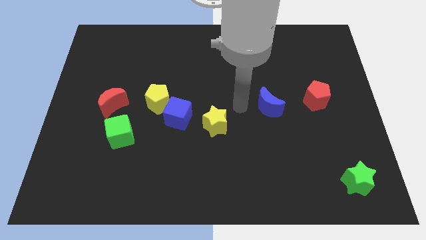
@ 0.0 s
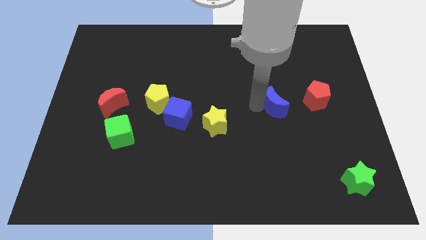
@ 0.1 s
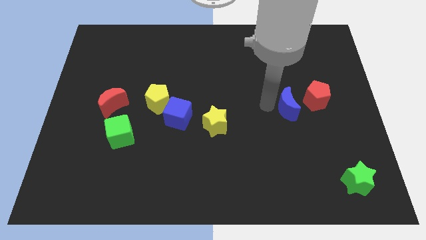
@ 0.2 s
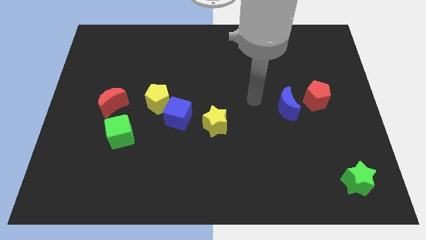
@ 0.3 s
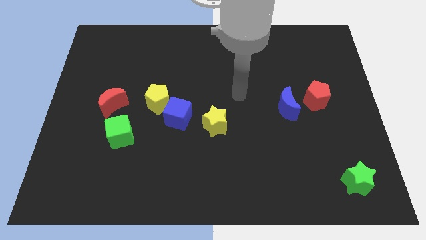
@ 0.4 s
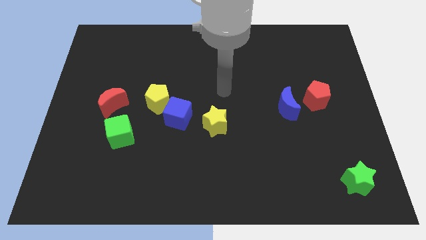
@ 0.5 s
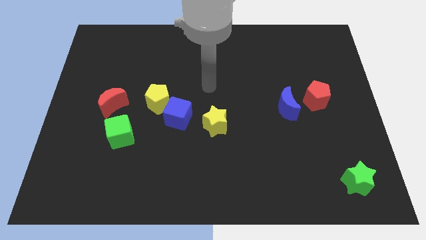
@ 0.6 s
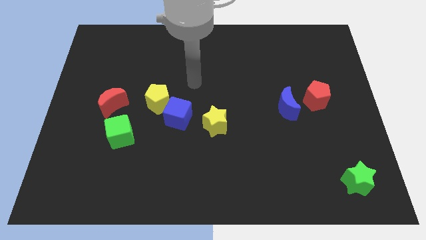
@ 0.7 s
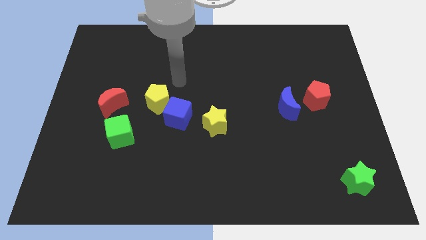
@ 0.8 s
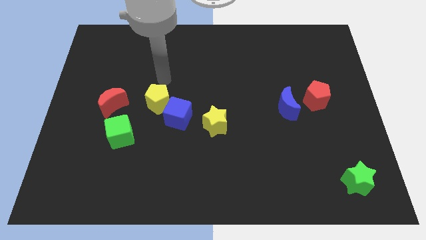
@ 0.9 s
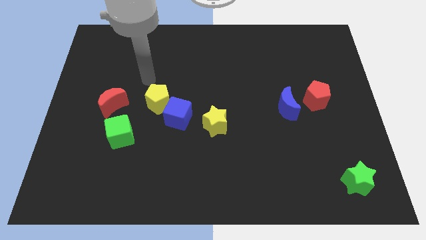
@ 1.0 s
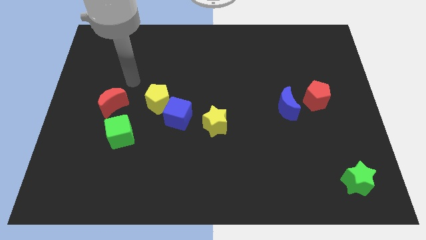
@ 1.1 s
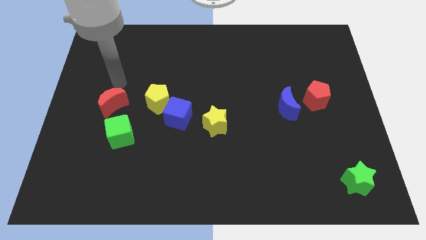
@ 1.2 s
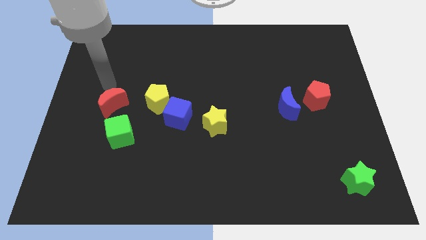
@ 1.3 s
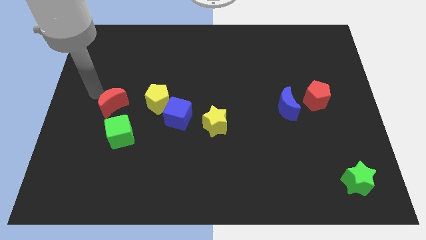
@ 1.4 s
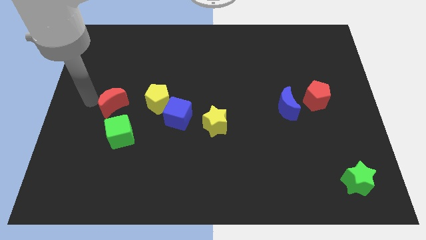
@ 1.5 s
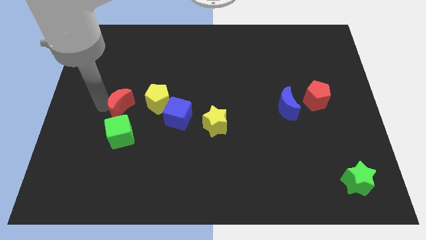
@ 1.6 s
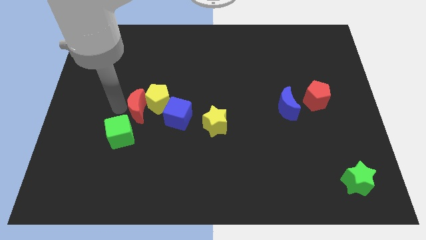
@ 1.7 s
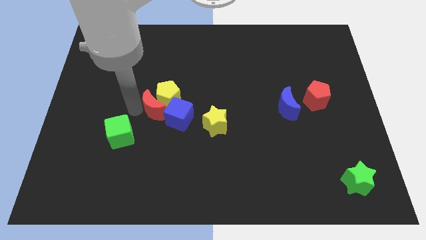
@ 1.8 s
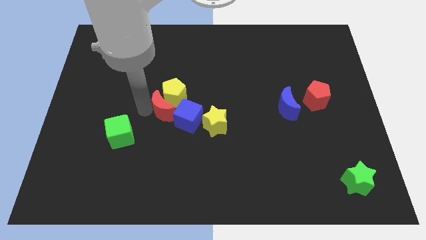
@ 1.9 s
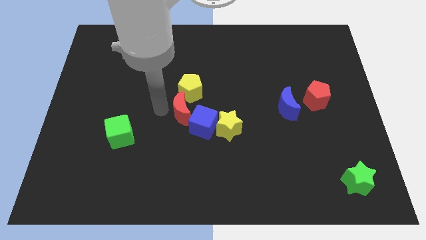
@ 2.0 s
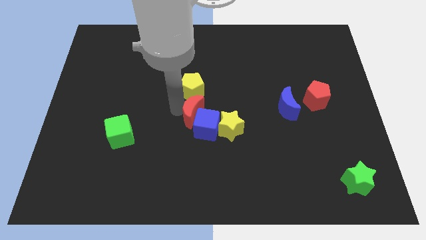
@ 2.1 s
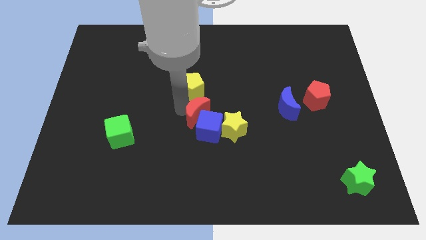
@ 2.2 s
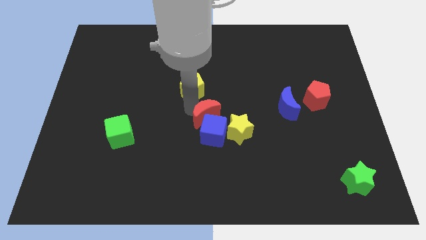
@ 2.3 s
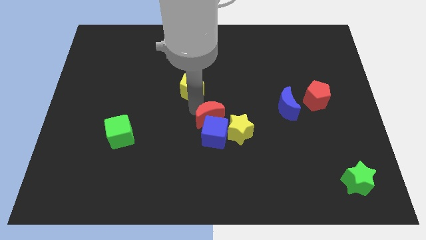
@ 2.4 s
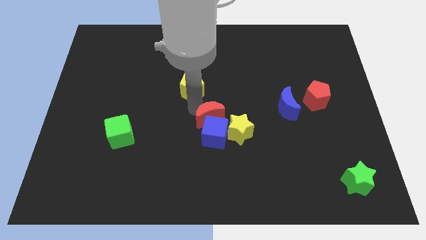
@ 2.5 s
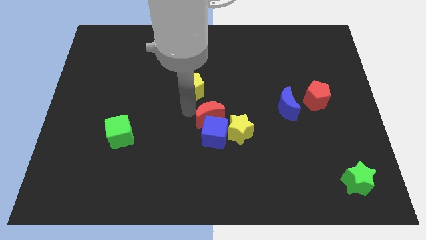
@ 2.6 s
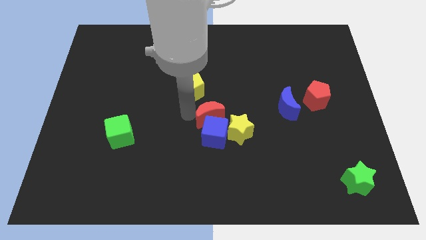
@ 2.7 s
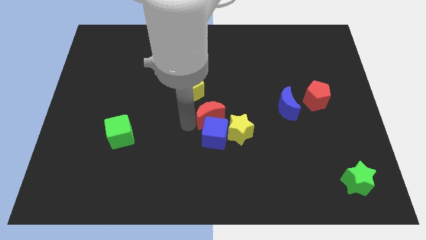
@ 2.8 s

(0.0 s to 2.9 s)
push the red crescent into blue cube

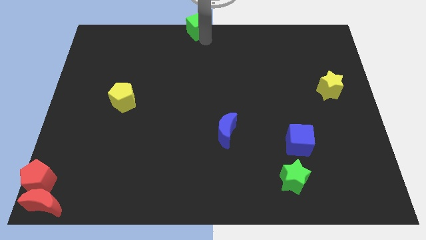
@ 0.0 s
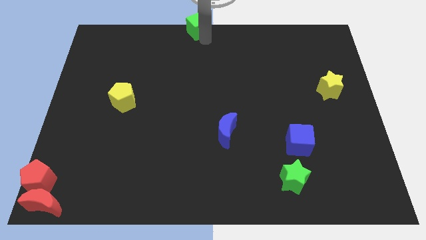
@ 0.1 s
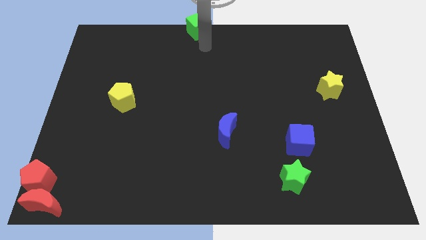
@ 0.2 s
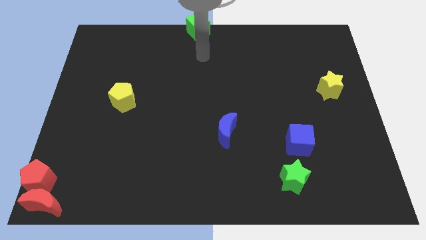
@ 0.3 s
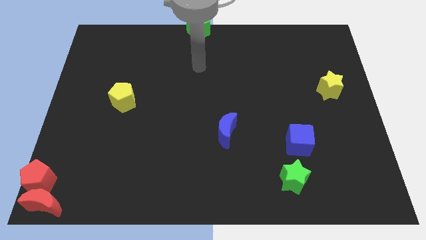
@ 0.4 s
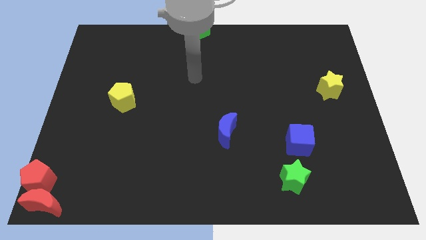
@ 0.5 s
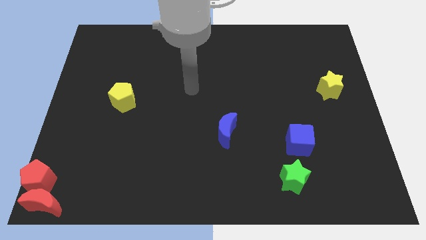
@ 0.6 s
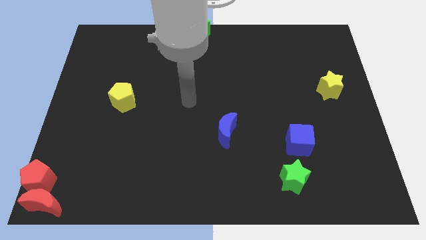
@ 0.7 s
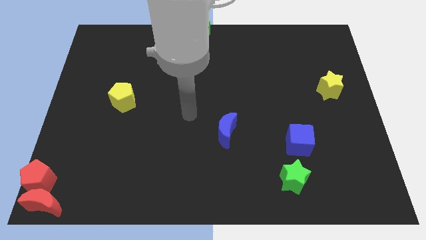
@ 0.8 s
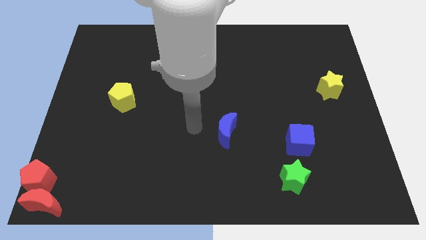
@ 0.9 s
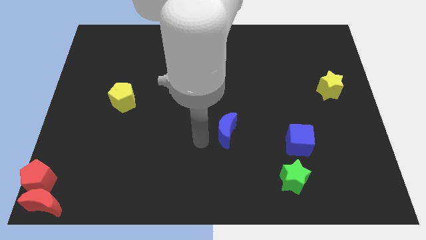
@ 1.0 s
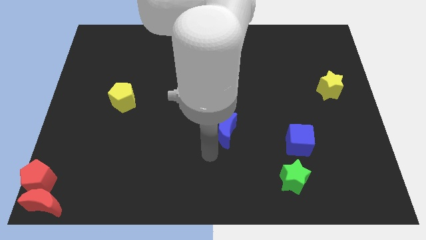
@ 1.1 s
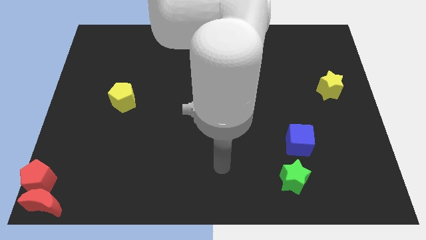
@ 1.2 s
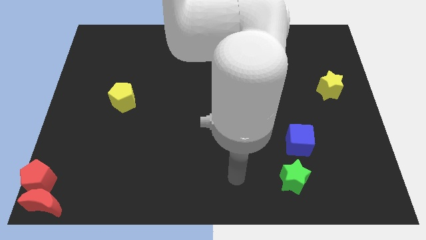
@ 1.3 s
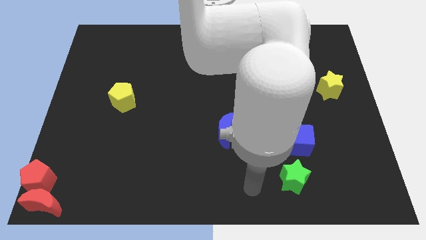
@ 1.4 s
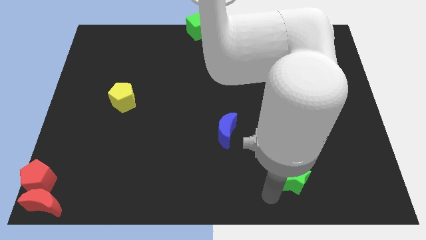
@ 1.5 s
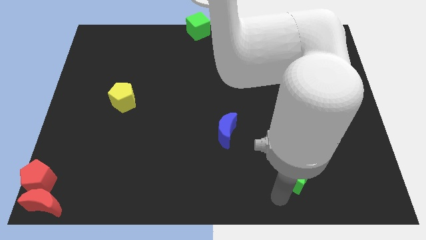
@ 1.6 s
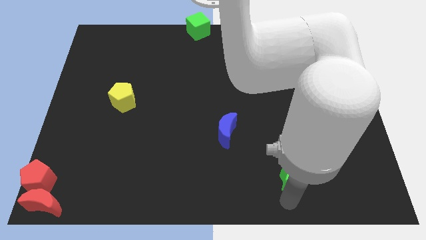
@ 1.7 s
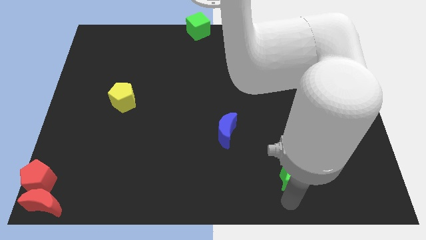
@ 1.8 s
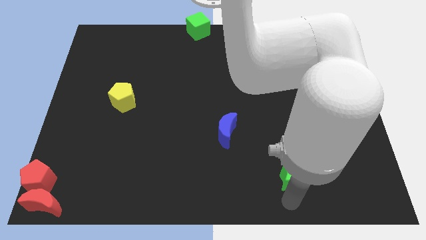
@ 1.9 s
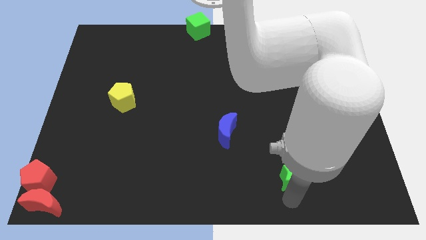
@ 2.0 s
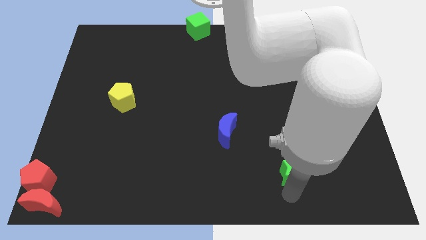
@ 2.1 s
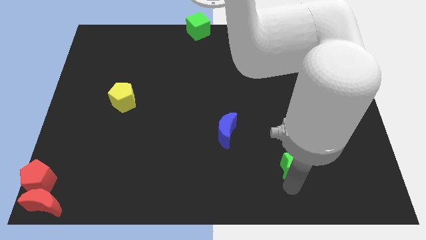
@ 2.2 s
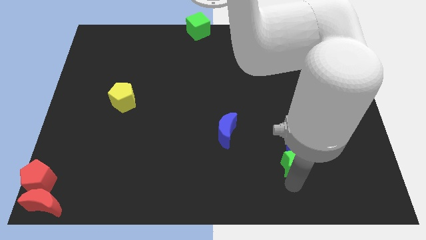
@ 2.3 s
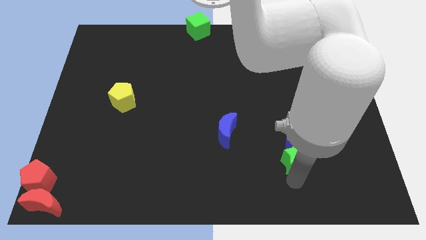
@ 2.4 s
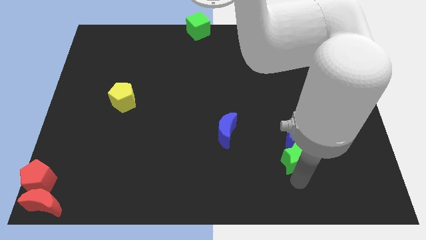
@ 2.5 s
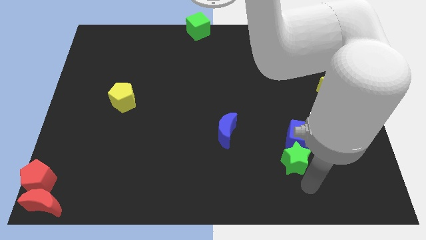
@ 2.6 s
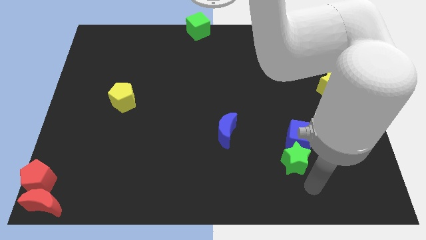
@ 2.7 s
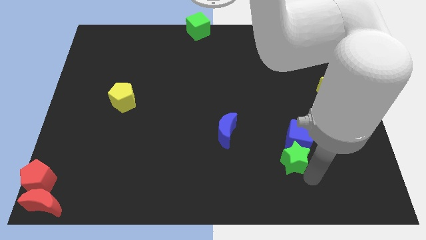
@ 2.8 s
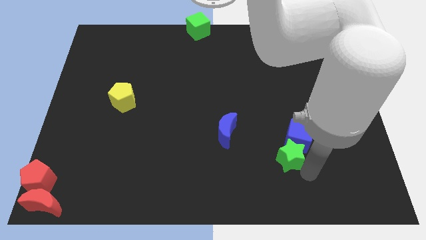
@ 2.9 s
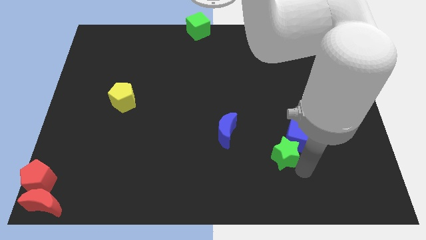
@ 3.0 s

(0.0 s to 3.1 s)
slide the green star into the blue cube

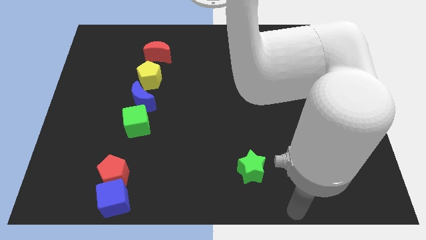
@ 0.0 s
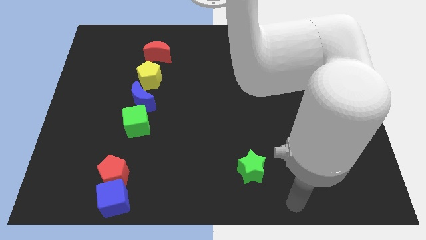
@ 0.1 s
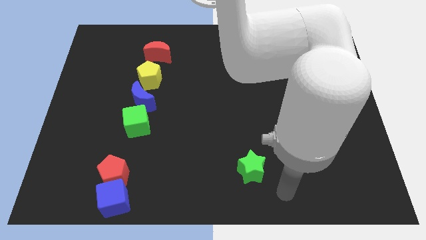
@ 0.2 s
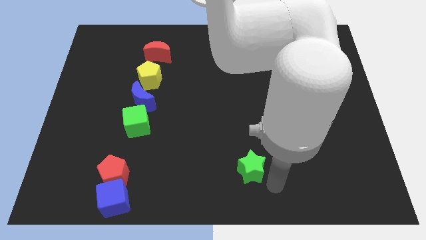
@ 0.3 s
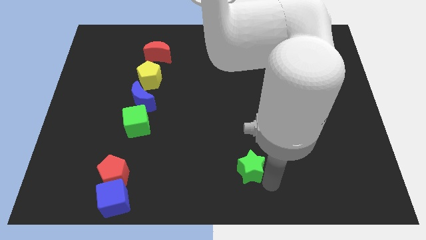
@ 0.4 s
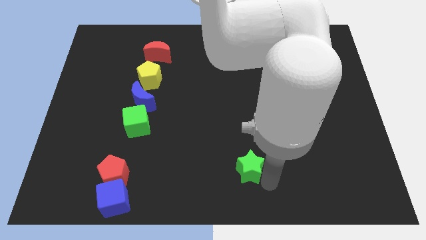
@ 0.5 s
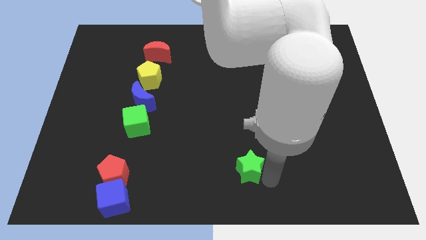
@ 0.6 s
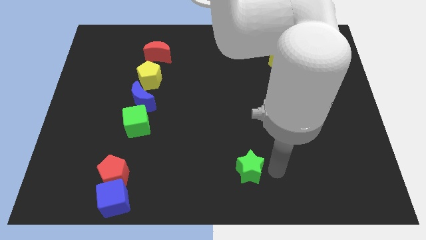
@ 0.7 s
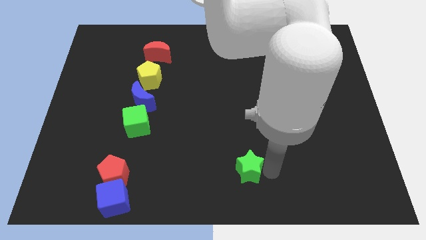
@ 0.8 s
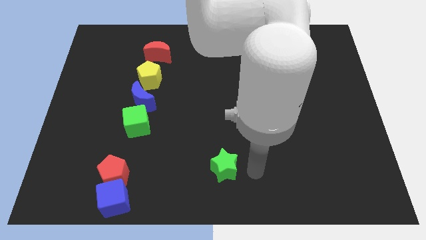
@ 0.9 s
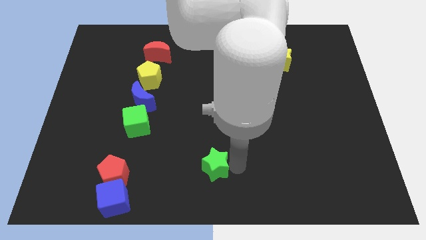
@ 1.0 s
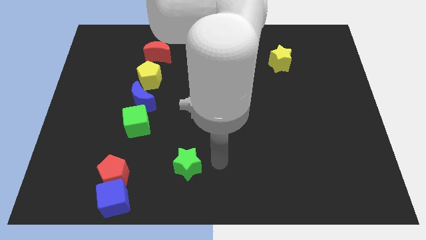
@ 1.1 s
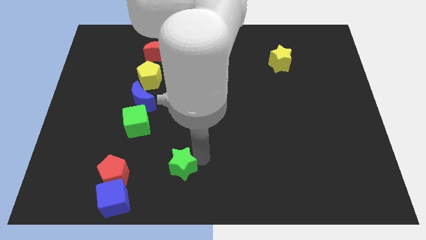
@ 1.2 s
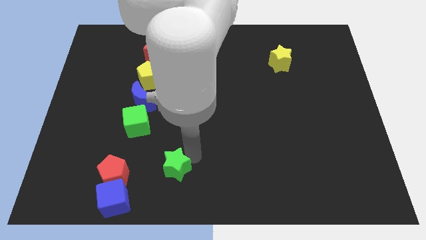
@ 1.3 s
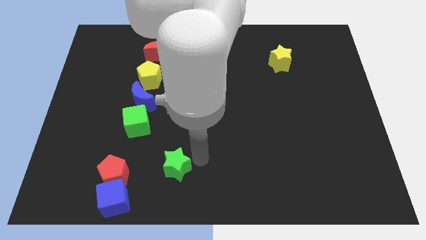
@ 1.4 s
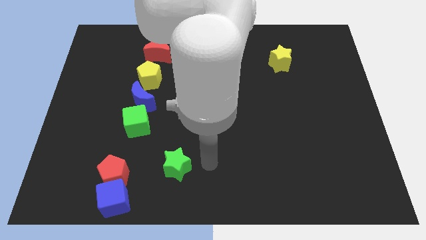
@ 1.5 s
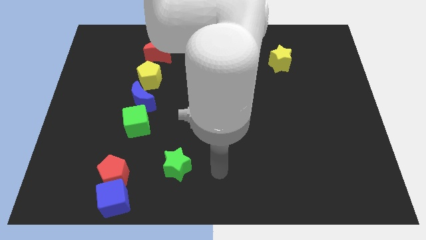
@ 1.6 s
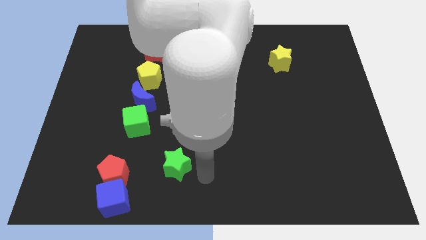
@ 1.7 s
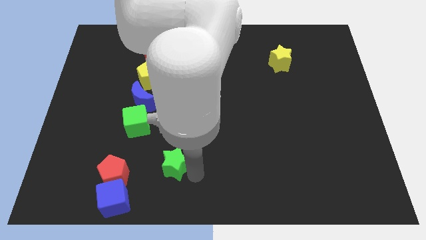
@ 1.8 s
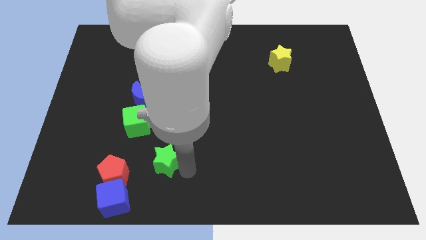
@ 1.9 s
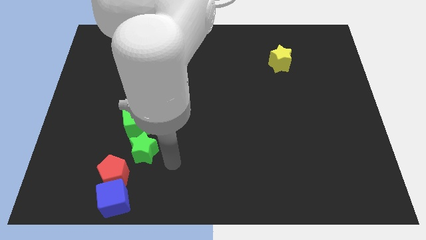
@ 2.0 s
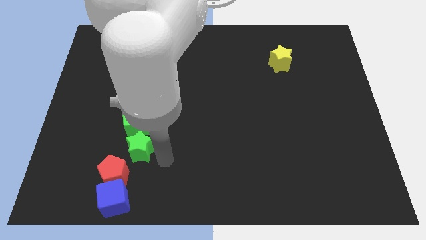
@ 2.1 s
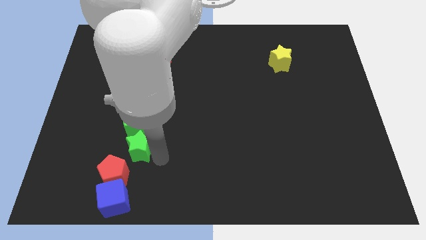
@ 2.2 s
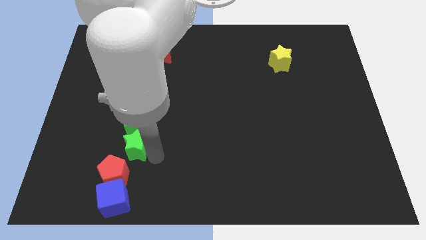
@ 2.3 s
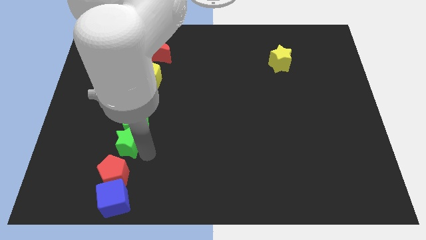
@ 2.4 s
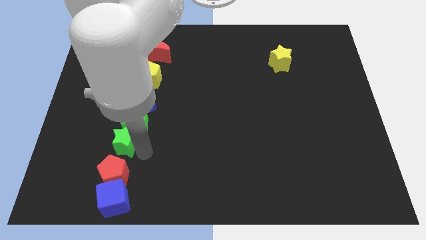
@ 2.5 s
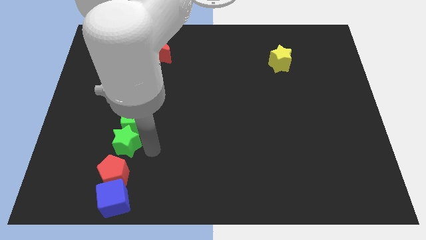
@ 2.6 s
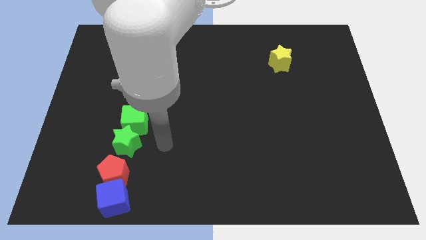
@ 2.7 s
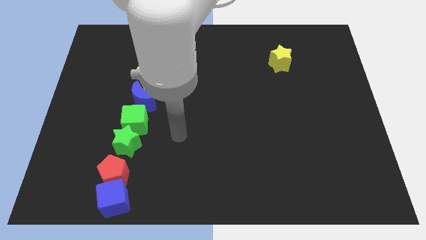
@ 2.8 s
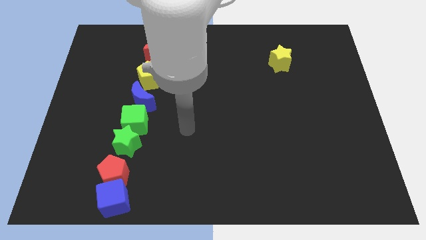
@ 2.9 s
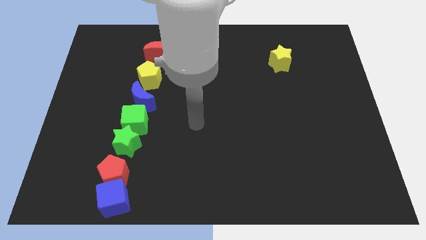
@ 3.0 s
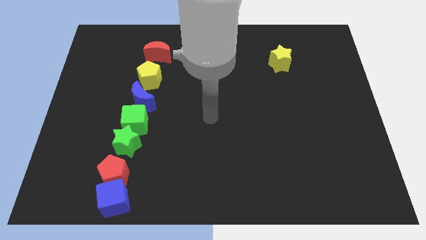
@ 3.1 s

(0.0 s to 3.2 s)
slide green star into green cube
